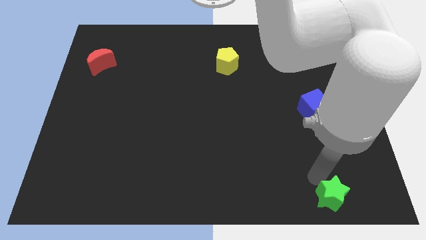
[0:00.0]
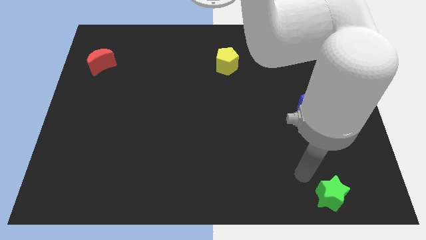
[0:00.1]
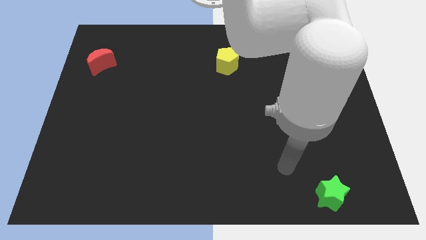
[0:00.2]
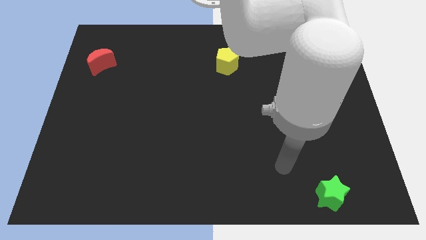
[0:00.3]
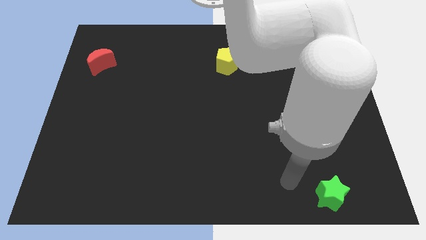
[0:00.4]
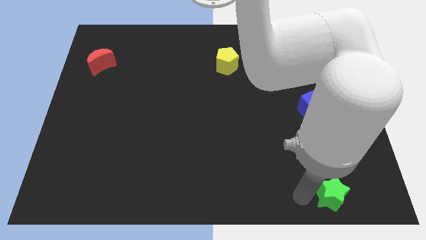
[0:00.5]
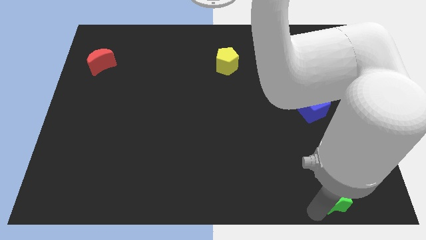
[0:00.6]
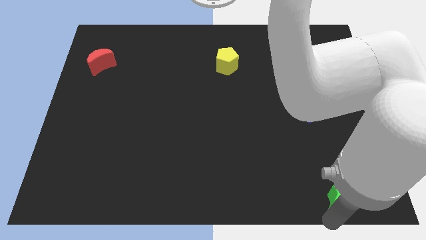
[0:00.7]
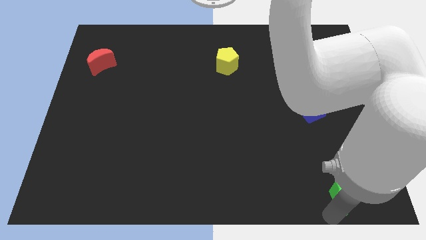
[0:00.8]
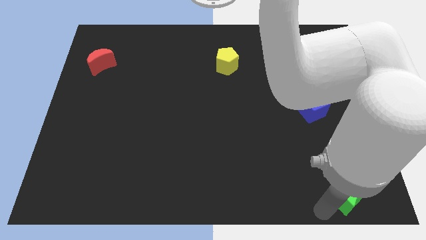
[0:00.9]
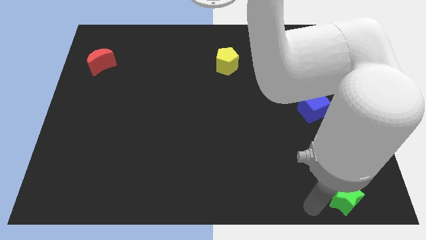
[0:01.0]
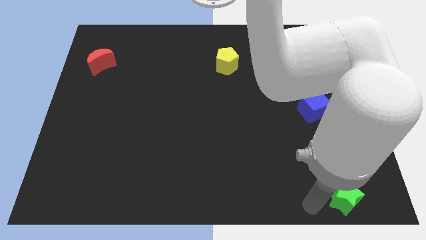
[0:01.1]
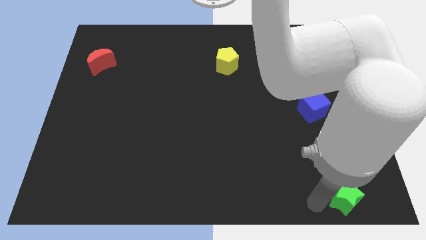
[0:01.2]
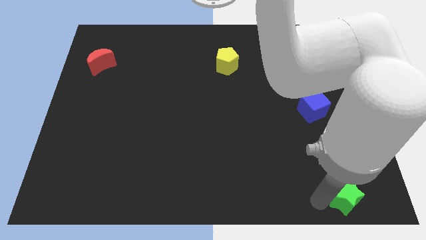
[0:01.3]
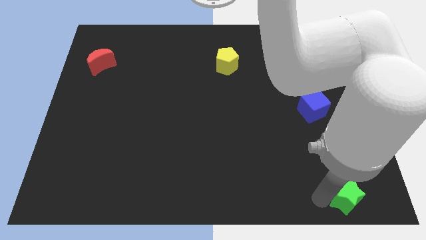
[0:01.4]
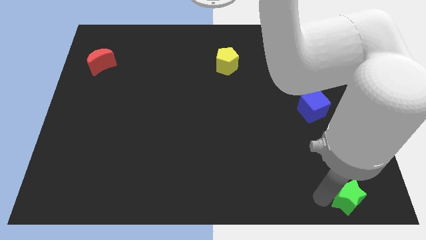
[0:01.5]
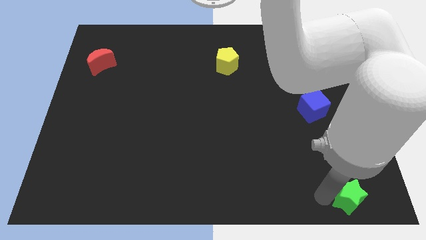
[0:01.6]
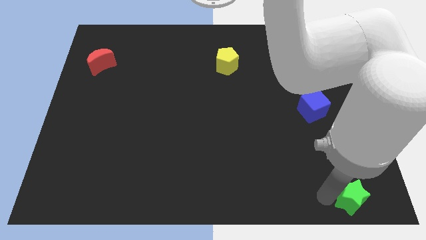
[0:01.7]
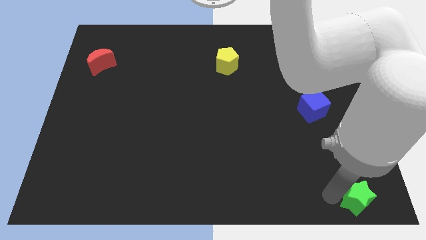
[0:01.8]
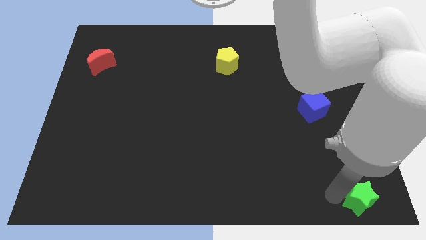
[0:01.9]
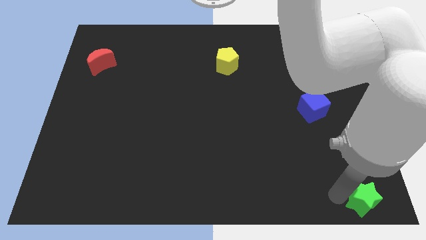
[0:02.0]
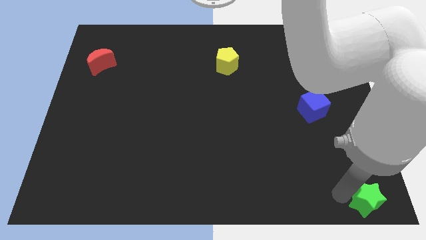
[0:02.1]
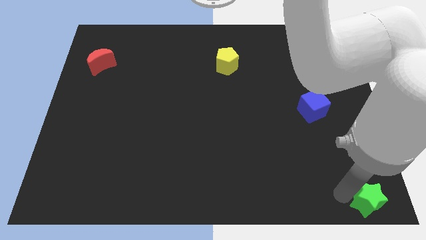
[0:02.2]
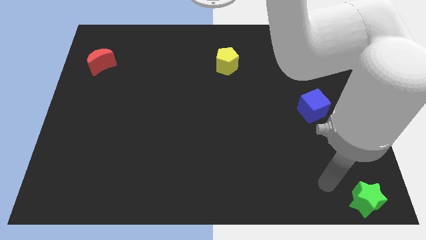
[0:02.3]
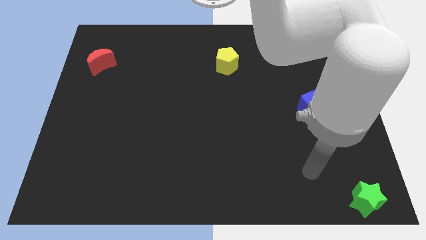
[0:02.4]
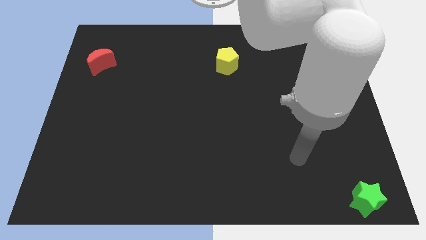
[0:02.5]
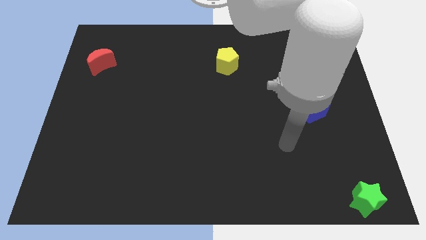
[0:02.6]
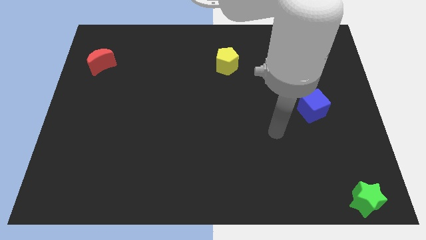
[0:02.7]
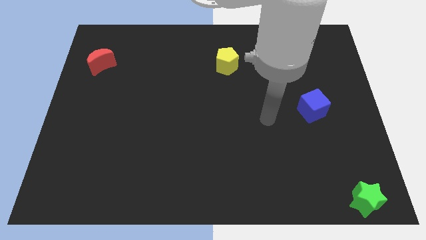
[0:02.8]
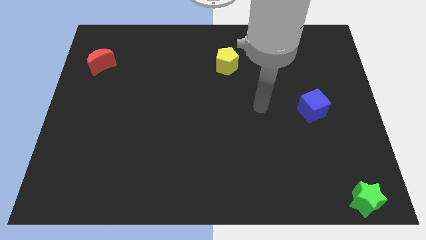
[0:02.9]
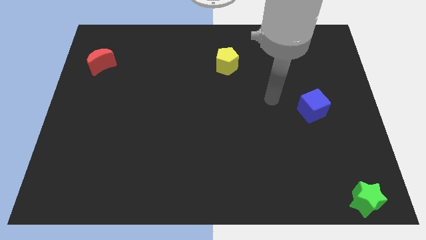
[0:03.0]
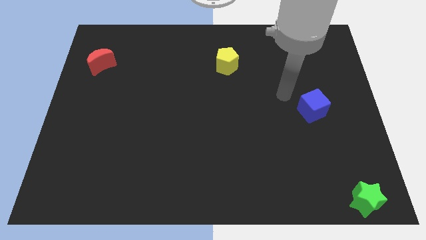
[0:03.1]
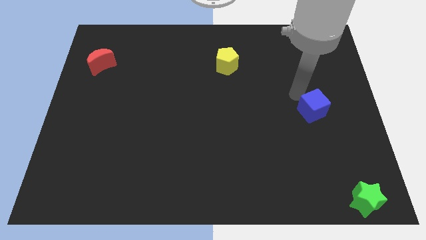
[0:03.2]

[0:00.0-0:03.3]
place green star to the bottom right corner of the board

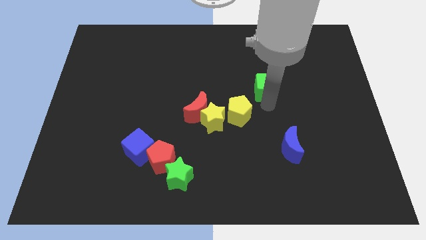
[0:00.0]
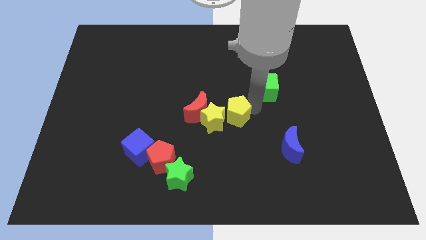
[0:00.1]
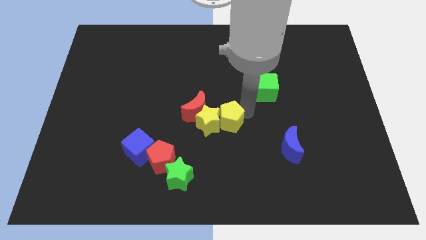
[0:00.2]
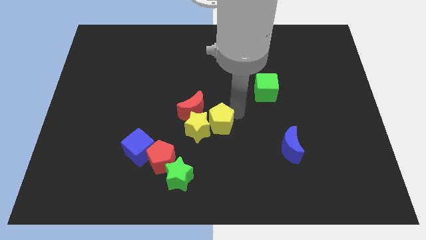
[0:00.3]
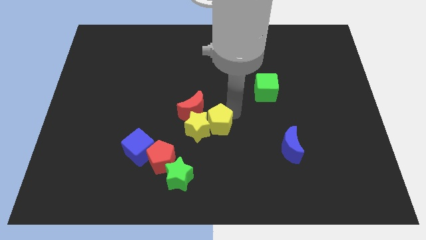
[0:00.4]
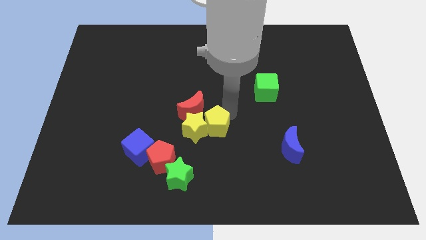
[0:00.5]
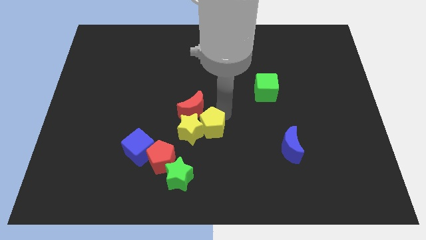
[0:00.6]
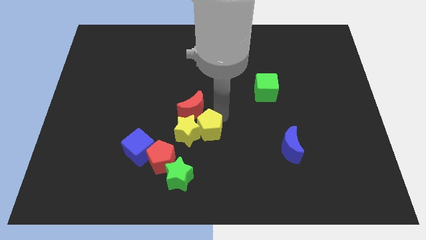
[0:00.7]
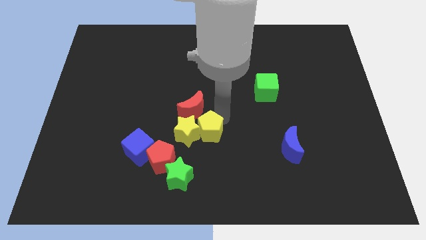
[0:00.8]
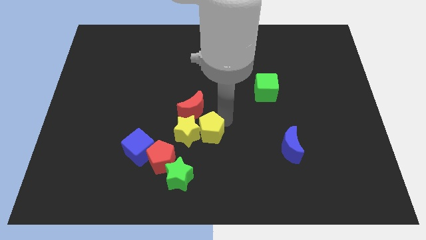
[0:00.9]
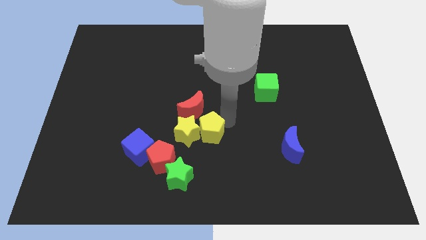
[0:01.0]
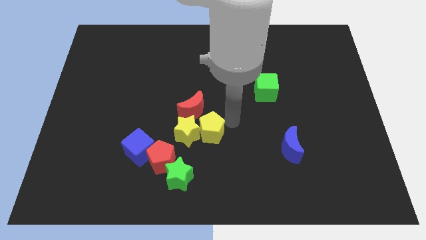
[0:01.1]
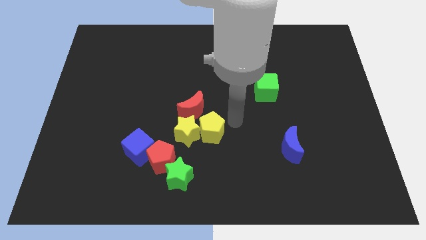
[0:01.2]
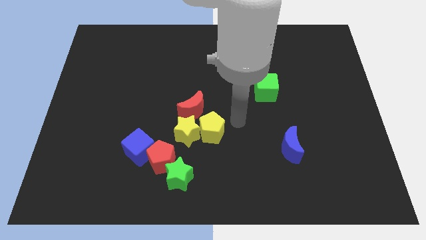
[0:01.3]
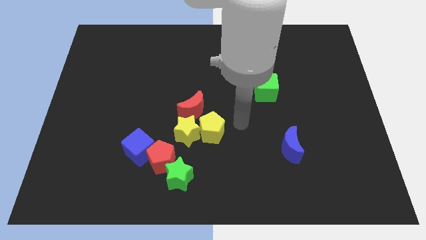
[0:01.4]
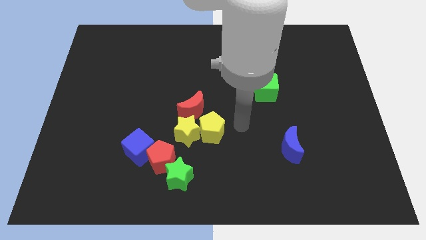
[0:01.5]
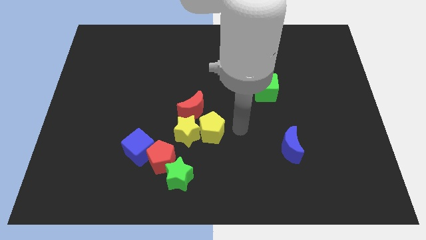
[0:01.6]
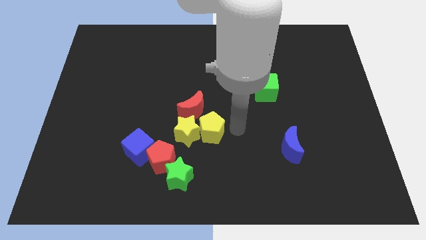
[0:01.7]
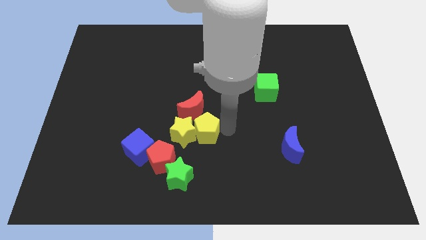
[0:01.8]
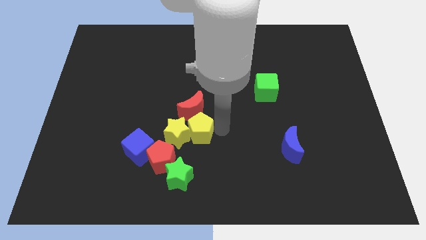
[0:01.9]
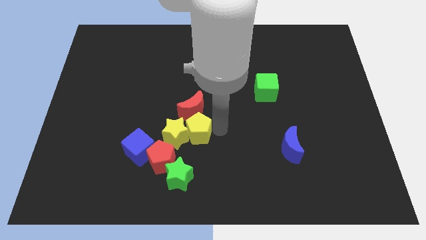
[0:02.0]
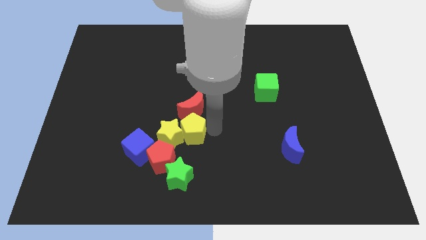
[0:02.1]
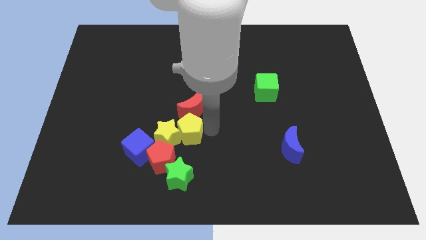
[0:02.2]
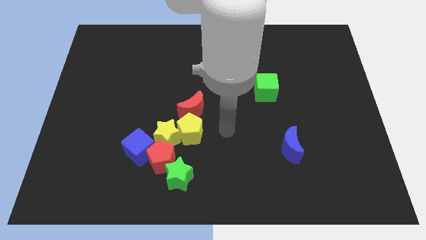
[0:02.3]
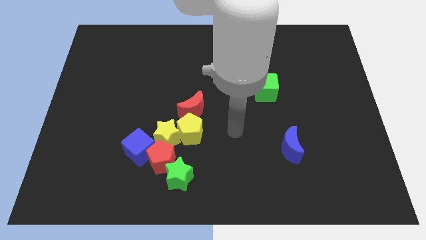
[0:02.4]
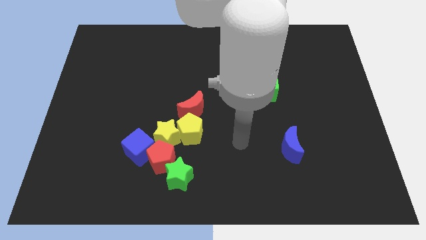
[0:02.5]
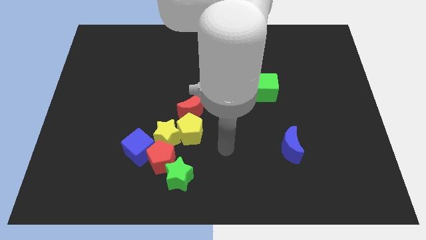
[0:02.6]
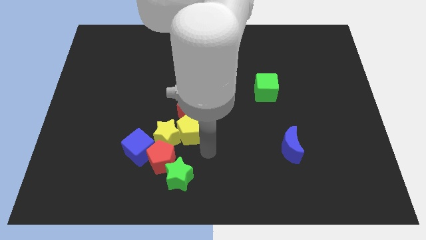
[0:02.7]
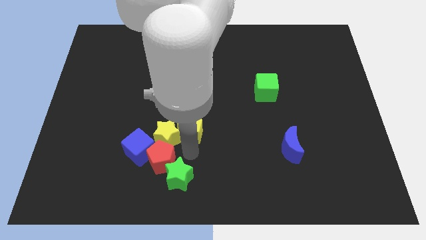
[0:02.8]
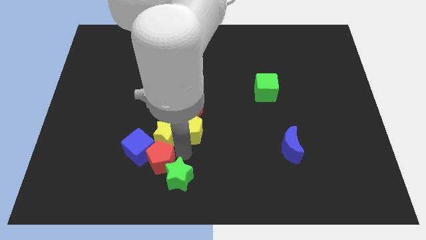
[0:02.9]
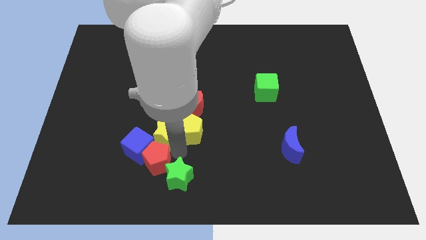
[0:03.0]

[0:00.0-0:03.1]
push the yellow pentagon into the yellow star

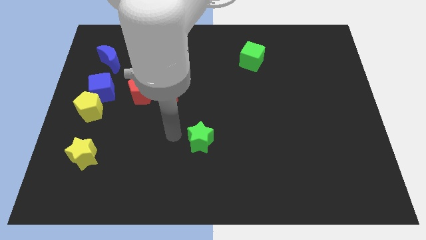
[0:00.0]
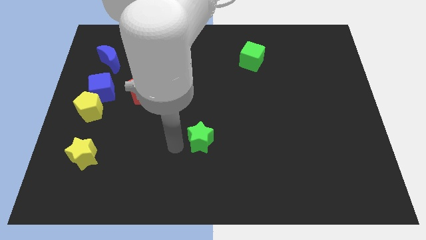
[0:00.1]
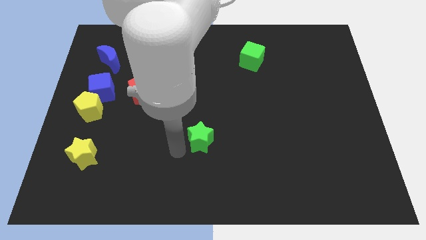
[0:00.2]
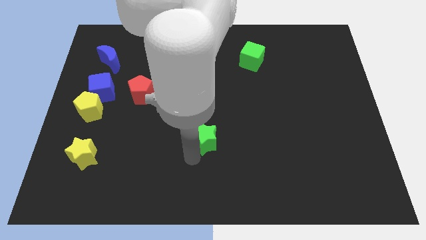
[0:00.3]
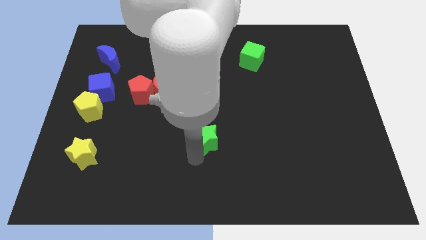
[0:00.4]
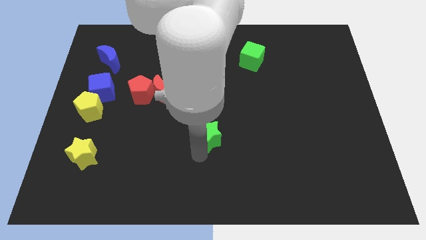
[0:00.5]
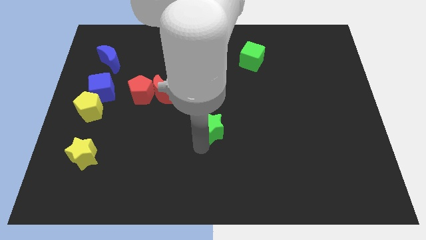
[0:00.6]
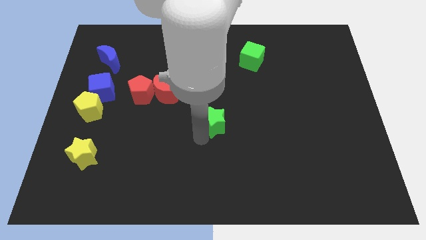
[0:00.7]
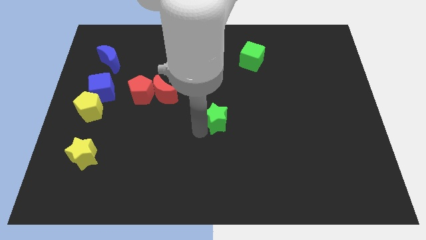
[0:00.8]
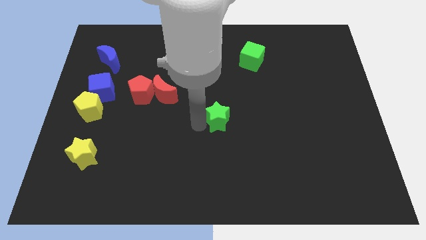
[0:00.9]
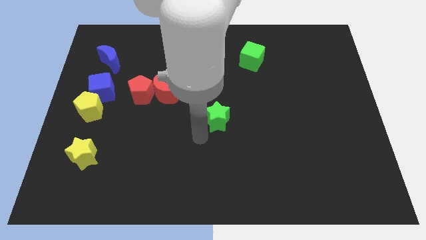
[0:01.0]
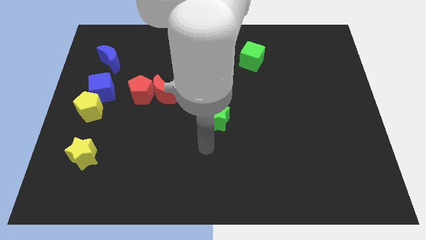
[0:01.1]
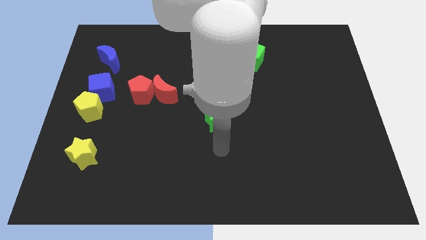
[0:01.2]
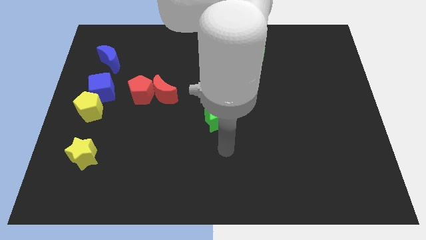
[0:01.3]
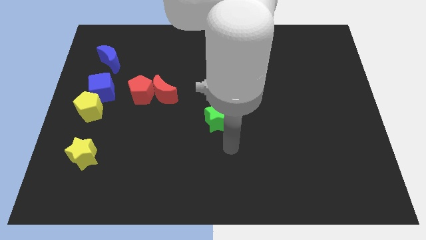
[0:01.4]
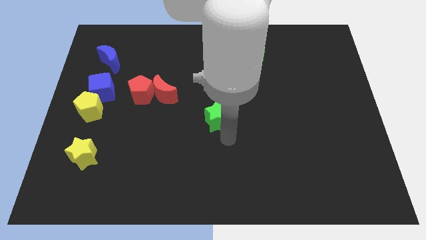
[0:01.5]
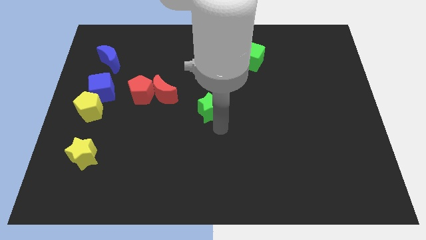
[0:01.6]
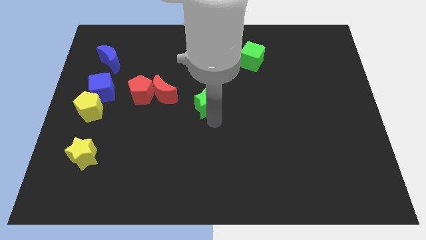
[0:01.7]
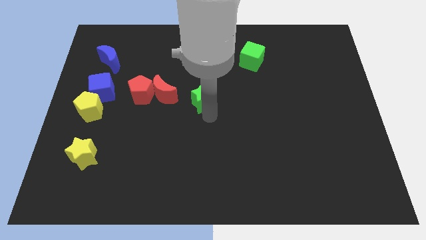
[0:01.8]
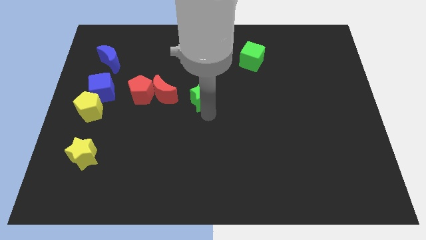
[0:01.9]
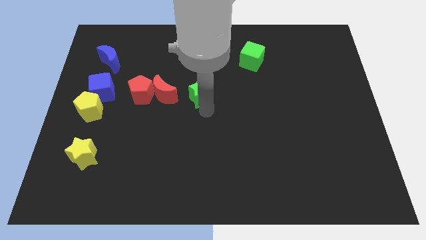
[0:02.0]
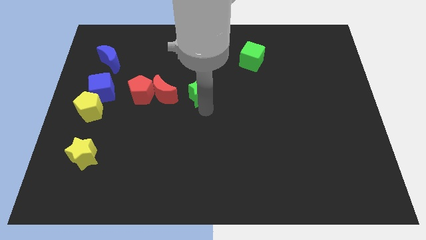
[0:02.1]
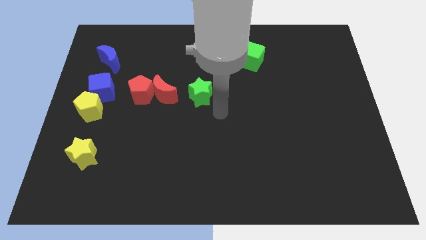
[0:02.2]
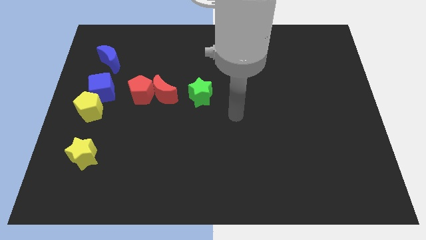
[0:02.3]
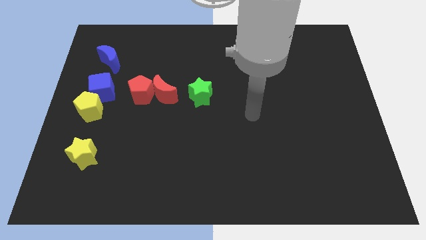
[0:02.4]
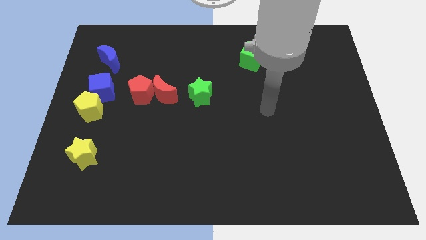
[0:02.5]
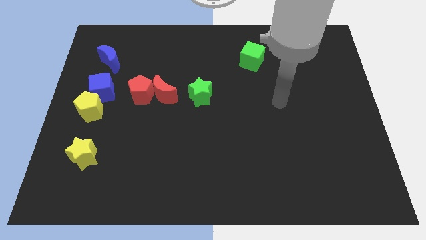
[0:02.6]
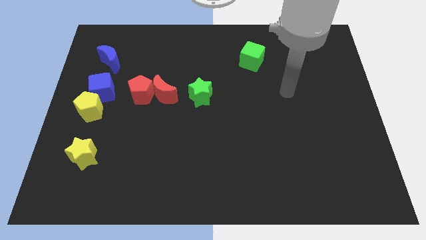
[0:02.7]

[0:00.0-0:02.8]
place the green star right to the red moon
